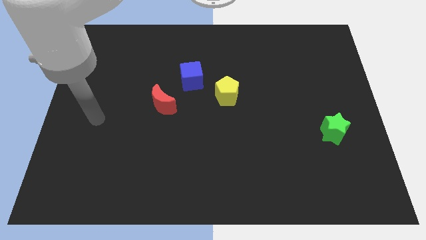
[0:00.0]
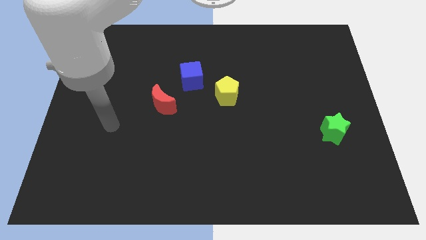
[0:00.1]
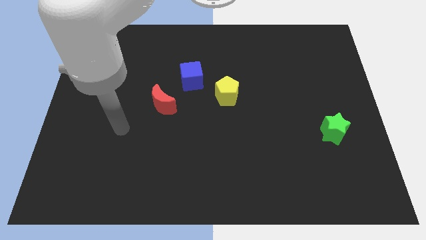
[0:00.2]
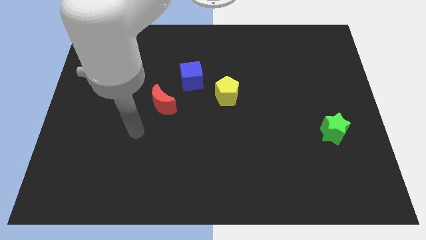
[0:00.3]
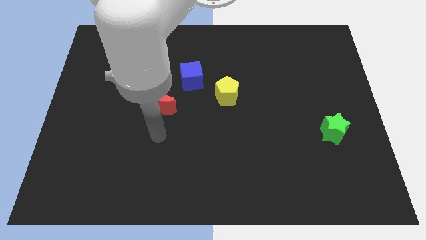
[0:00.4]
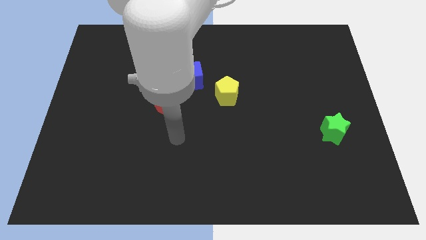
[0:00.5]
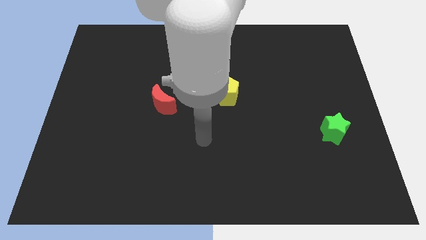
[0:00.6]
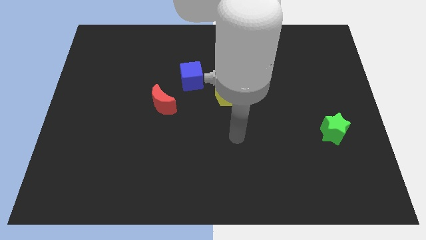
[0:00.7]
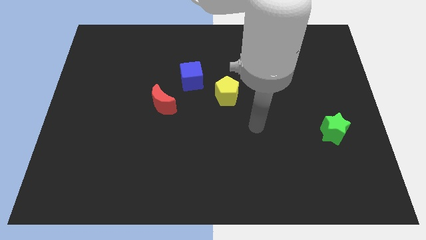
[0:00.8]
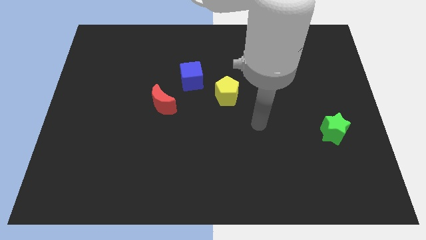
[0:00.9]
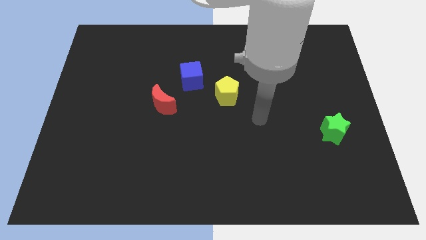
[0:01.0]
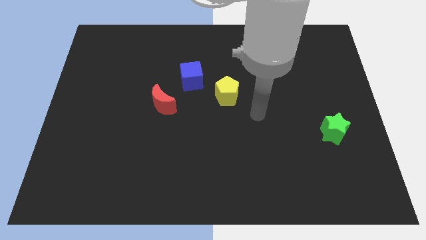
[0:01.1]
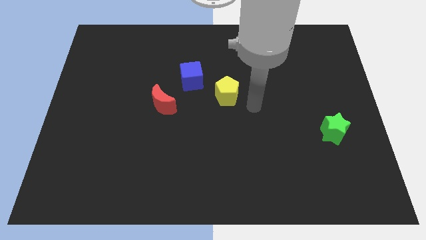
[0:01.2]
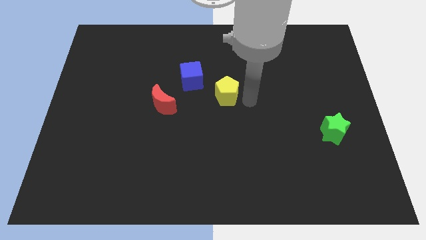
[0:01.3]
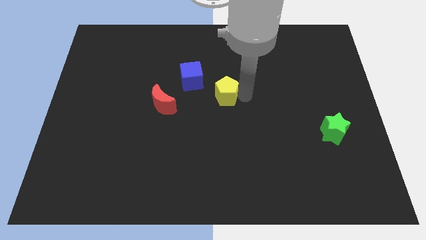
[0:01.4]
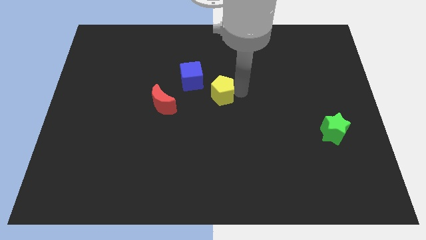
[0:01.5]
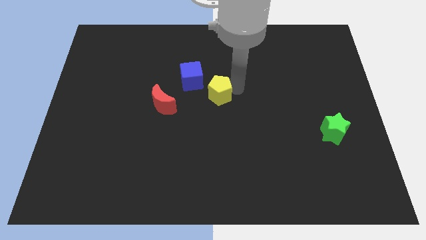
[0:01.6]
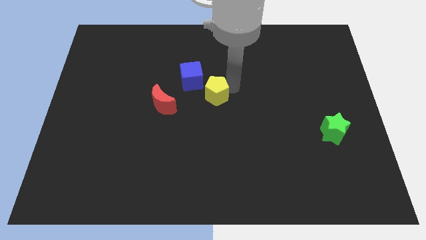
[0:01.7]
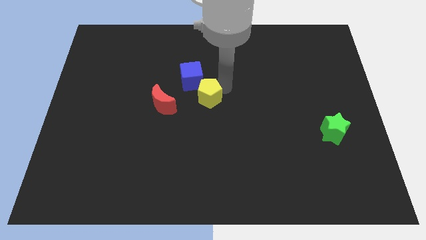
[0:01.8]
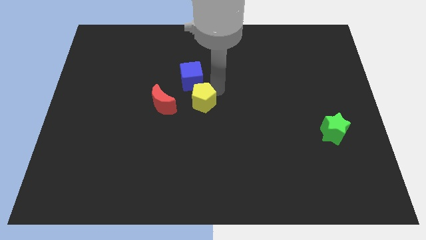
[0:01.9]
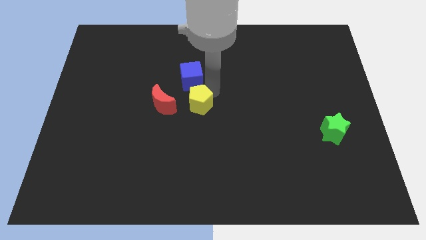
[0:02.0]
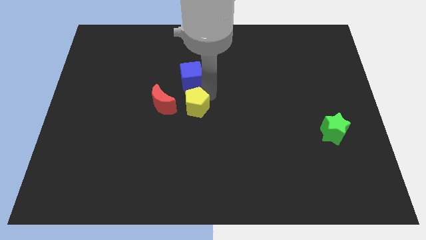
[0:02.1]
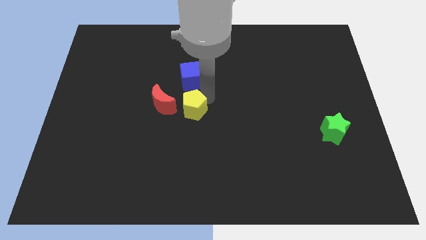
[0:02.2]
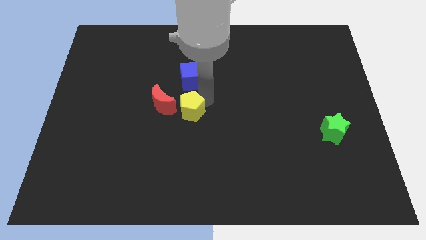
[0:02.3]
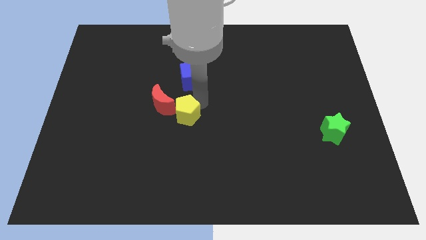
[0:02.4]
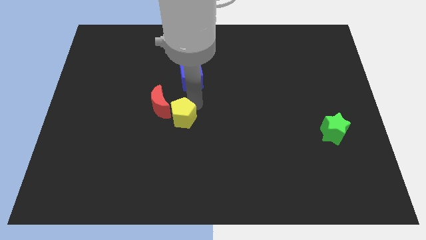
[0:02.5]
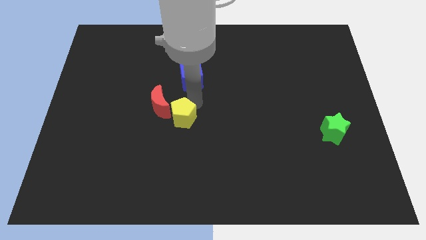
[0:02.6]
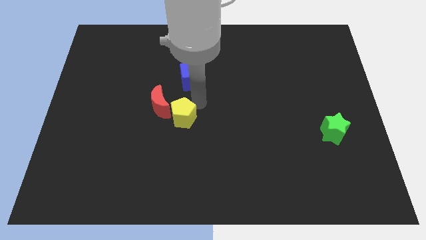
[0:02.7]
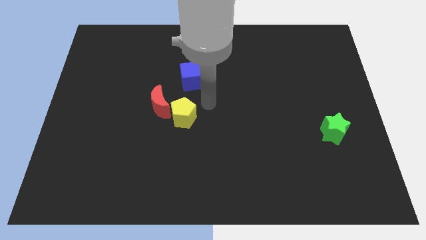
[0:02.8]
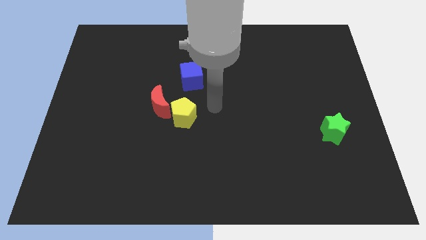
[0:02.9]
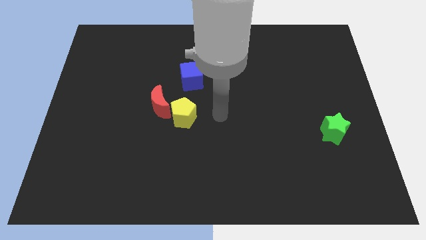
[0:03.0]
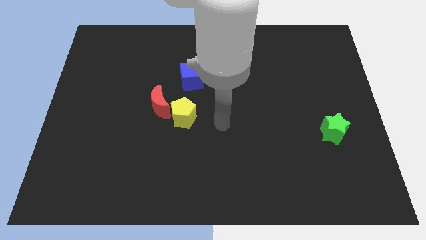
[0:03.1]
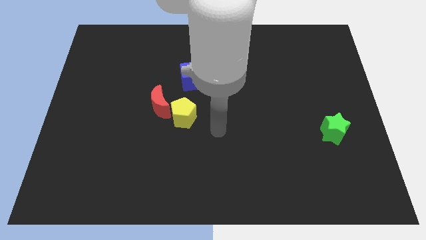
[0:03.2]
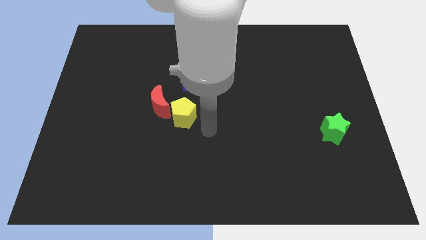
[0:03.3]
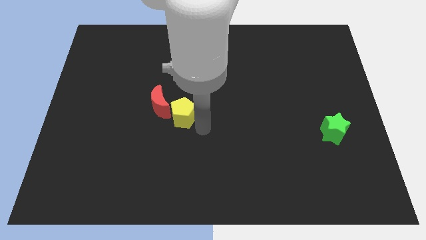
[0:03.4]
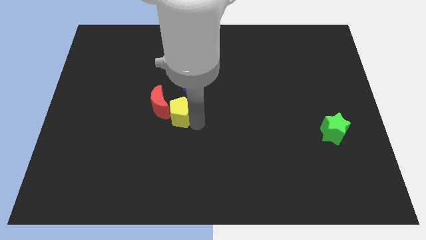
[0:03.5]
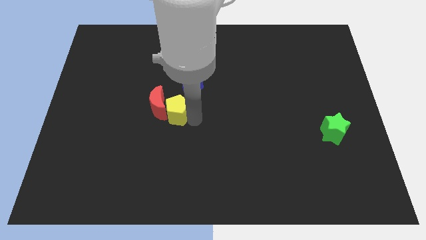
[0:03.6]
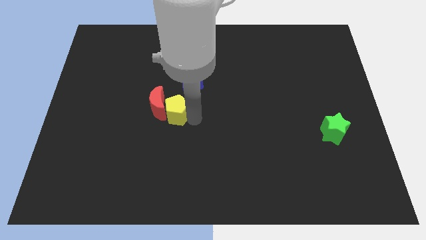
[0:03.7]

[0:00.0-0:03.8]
push the pentagon towards the red block

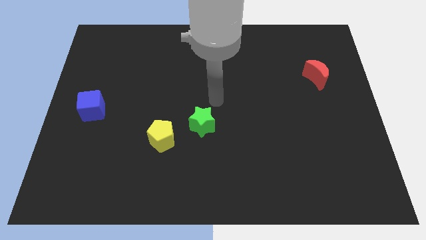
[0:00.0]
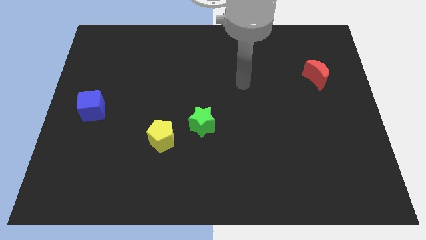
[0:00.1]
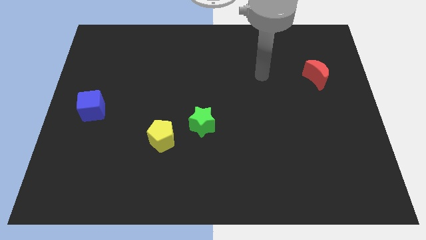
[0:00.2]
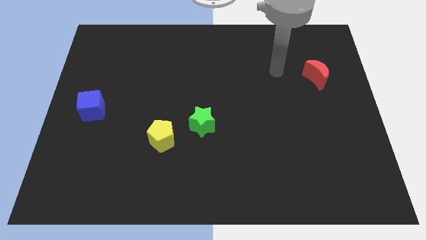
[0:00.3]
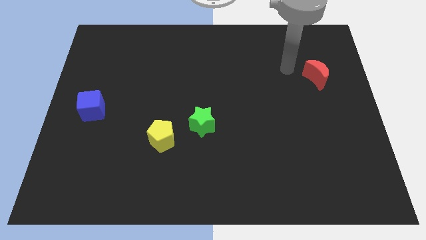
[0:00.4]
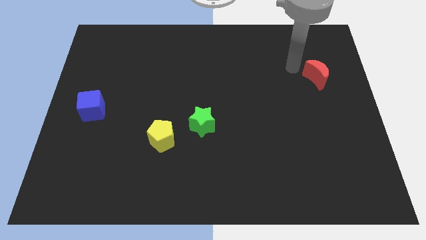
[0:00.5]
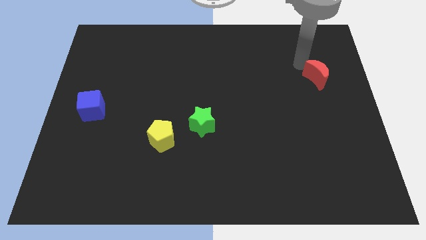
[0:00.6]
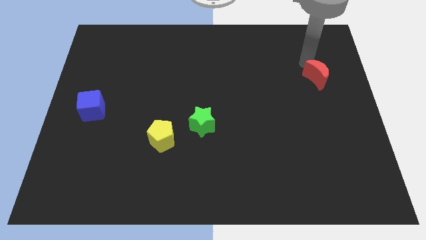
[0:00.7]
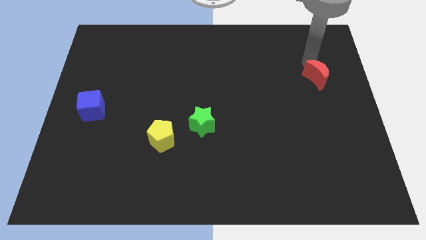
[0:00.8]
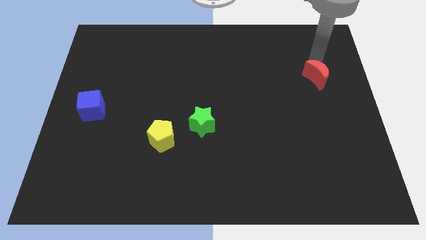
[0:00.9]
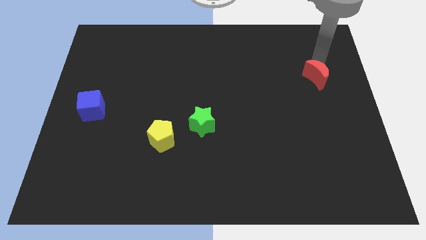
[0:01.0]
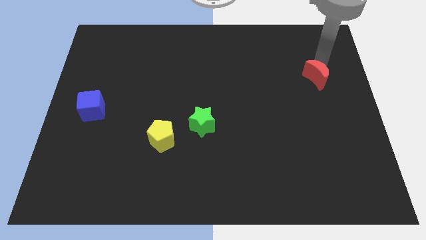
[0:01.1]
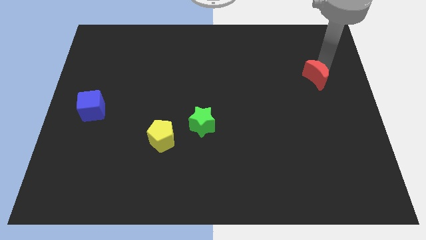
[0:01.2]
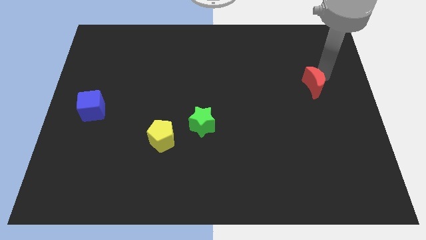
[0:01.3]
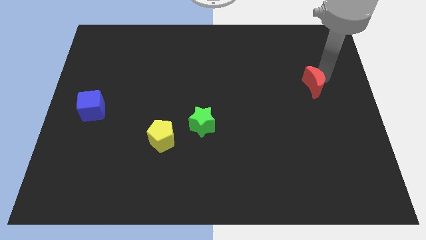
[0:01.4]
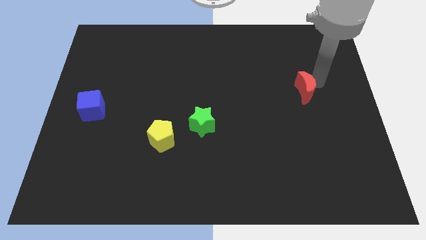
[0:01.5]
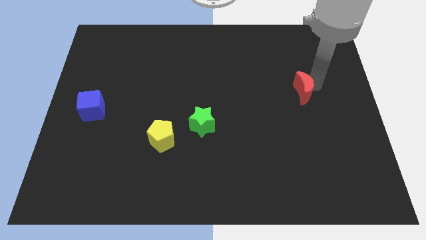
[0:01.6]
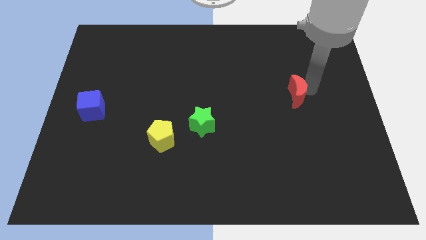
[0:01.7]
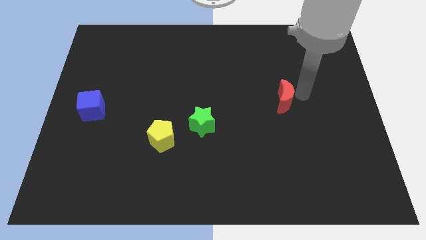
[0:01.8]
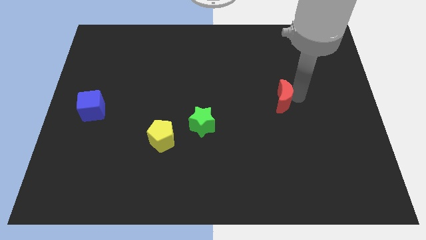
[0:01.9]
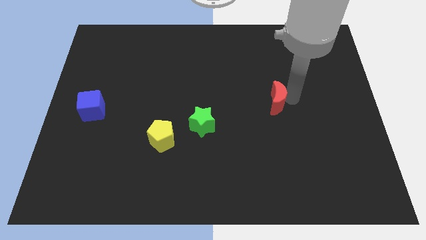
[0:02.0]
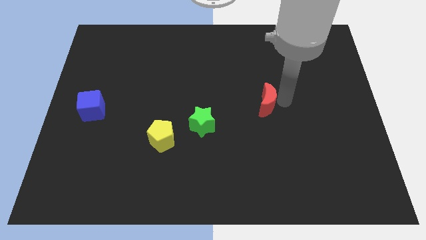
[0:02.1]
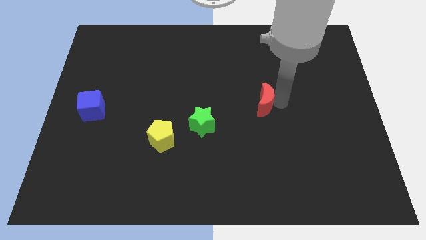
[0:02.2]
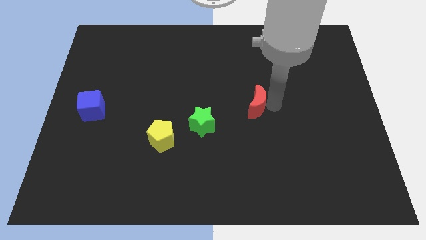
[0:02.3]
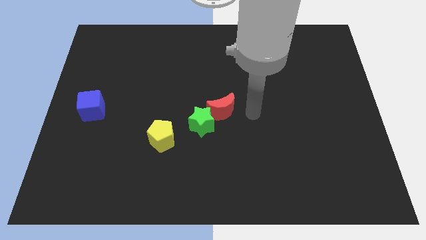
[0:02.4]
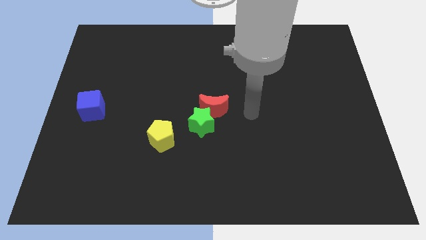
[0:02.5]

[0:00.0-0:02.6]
put the red moon towards the green block

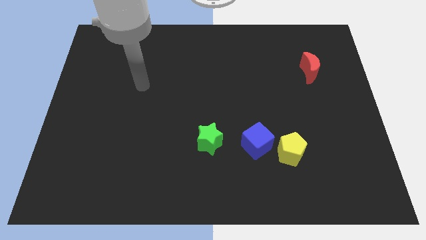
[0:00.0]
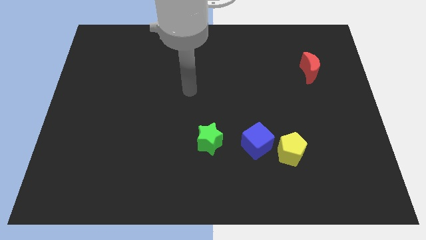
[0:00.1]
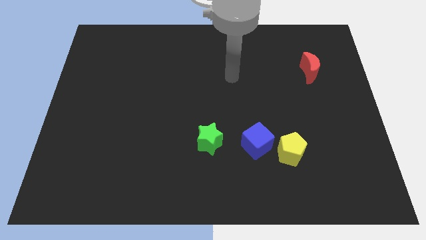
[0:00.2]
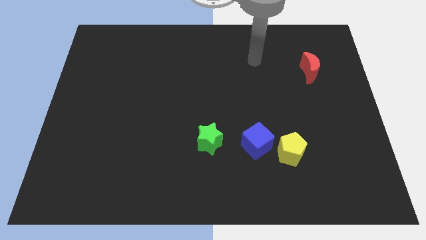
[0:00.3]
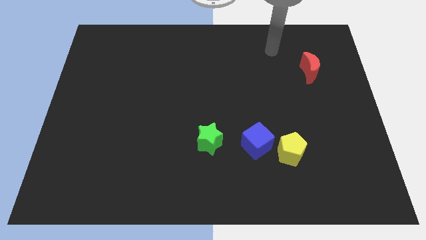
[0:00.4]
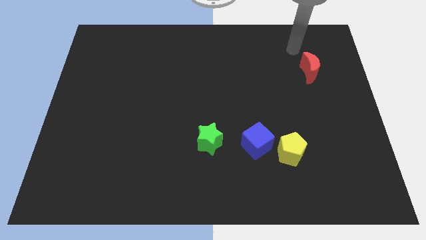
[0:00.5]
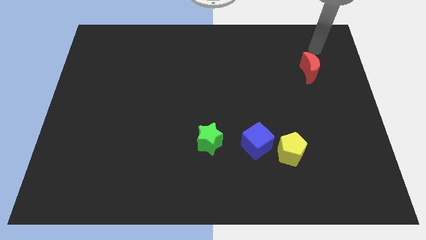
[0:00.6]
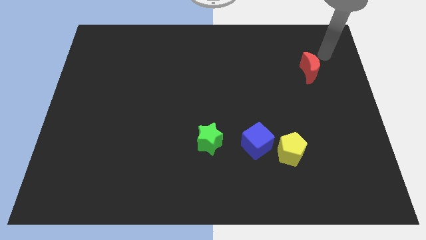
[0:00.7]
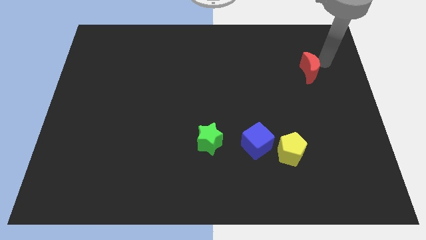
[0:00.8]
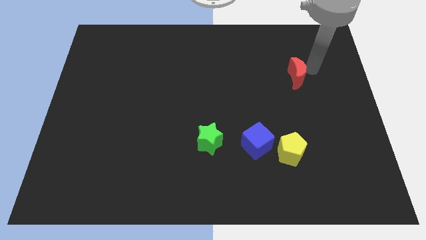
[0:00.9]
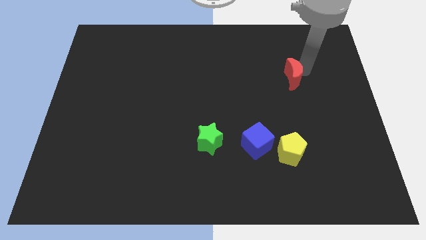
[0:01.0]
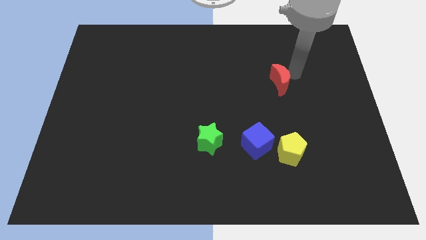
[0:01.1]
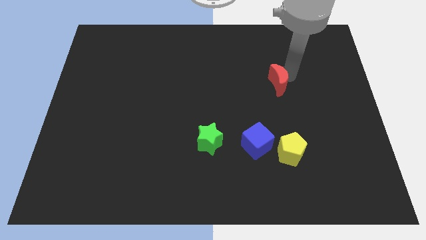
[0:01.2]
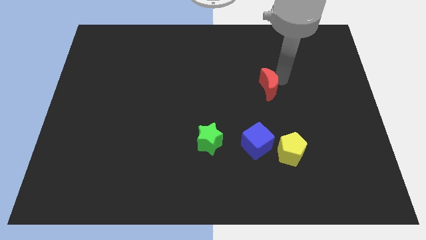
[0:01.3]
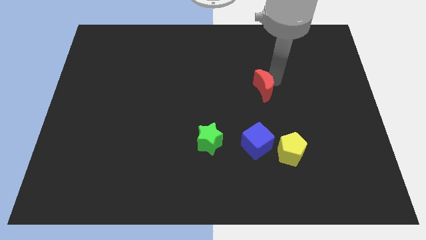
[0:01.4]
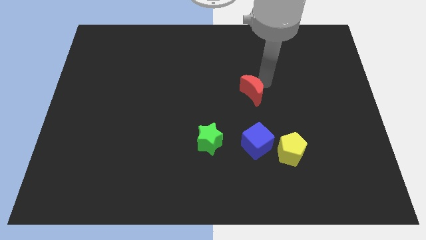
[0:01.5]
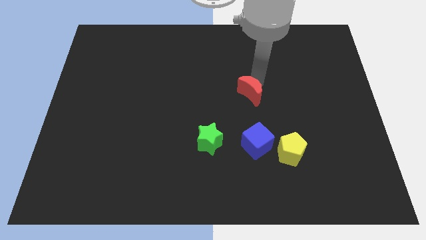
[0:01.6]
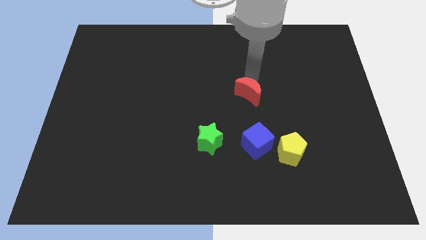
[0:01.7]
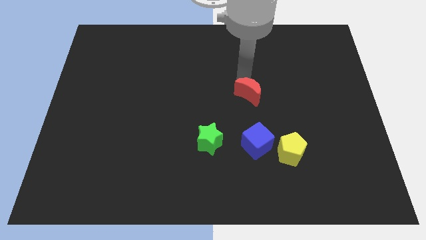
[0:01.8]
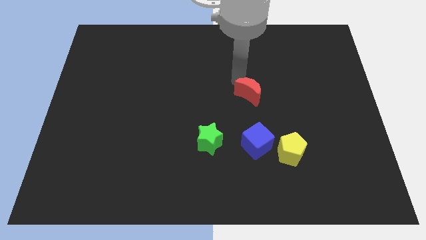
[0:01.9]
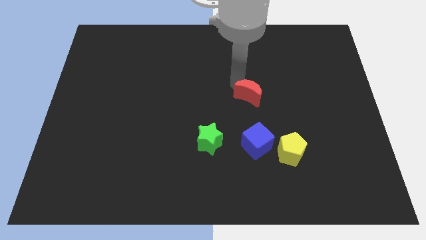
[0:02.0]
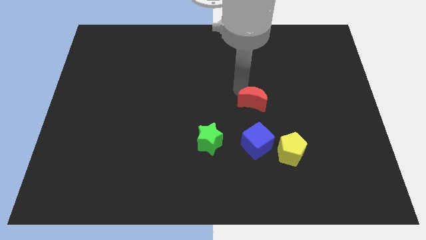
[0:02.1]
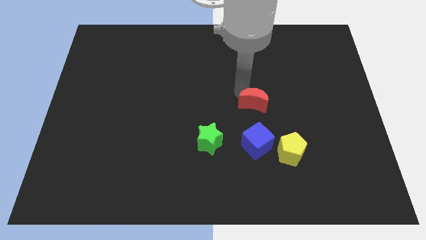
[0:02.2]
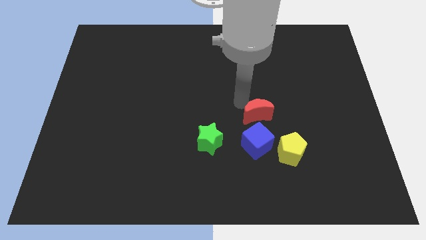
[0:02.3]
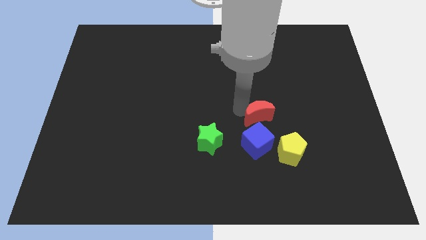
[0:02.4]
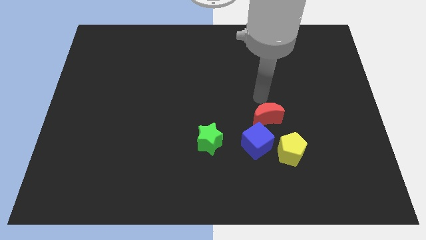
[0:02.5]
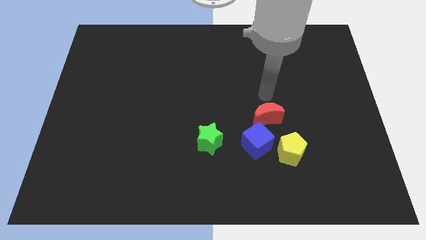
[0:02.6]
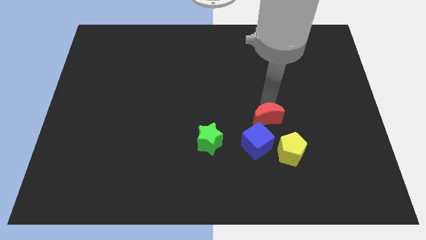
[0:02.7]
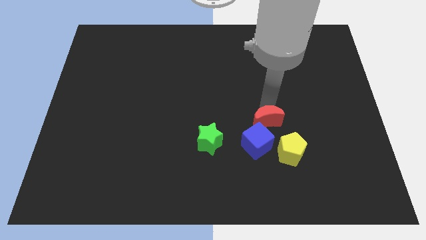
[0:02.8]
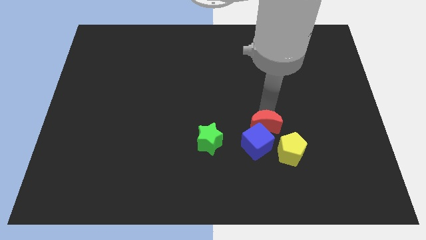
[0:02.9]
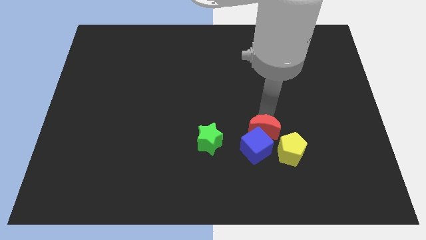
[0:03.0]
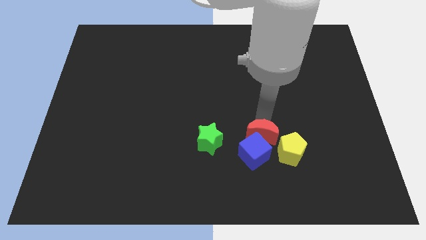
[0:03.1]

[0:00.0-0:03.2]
slide the moon to the blue block
